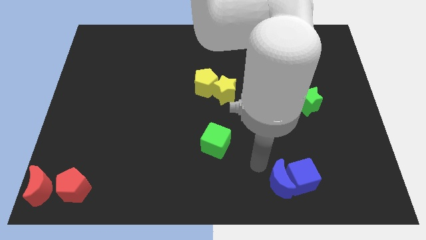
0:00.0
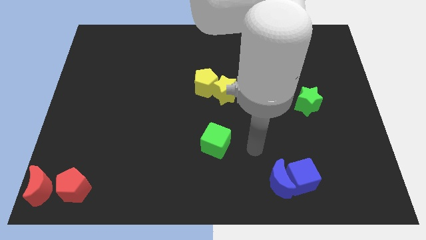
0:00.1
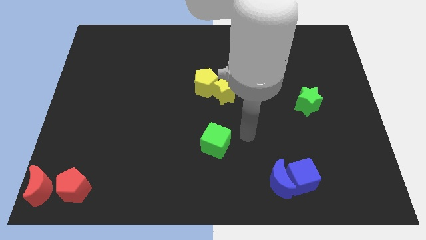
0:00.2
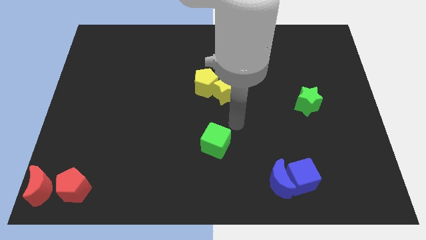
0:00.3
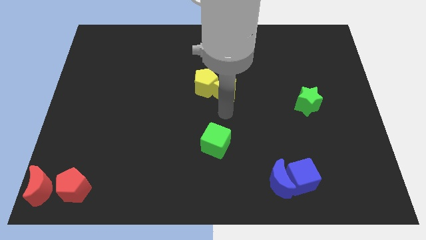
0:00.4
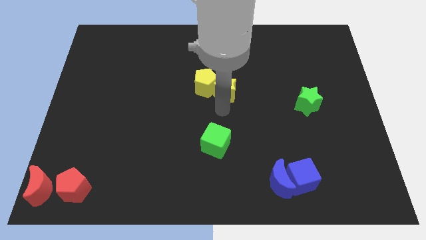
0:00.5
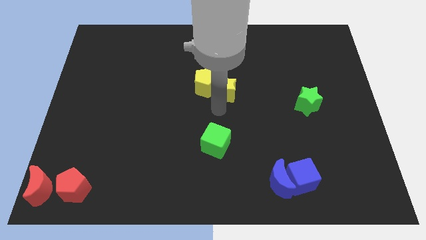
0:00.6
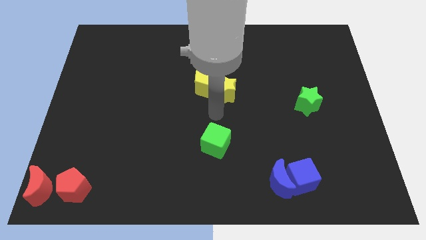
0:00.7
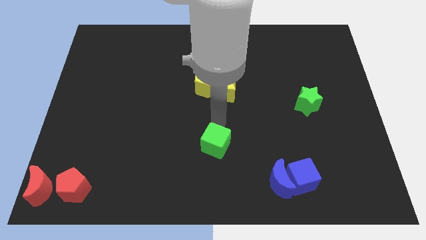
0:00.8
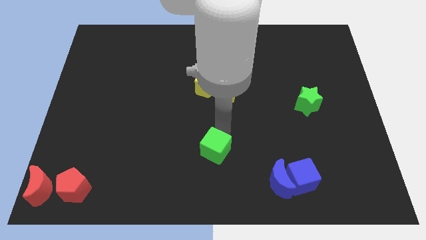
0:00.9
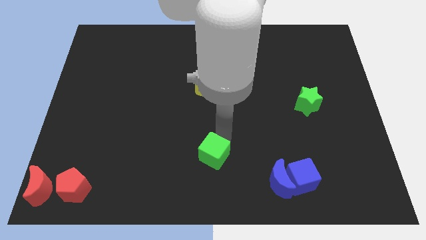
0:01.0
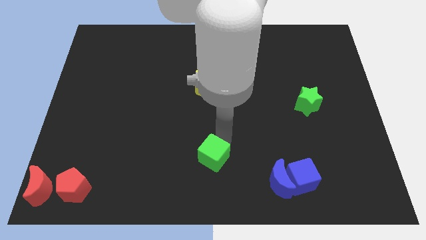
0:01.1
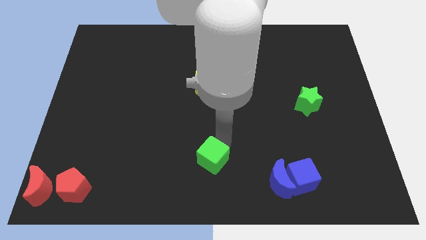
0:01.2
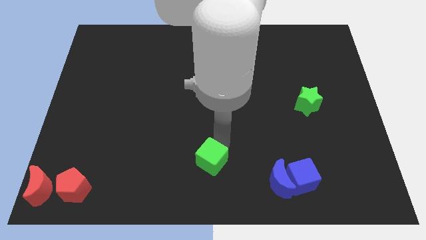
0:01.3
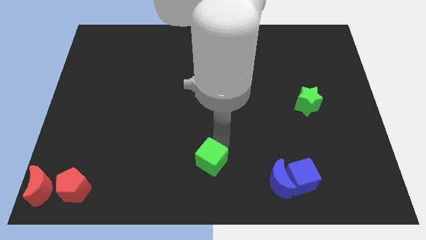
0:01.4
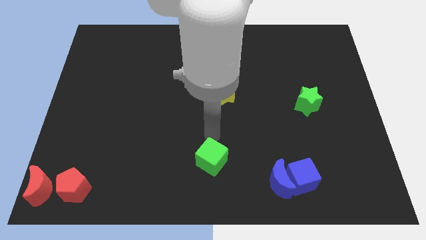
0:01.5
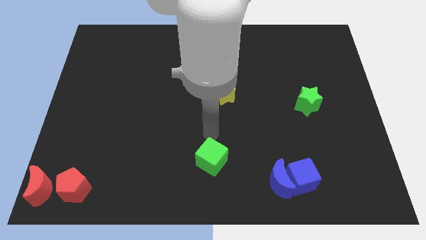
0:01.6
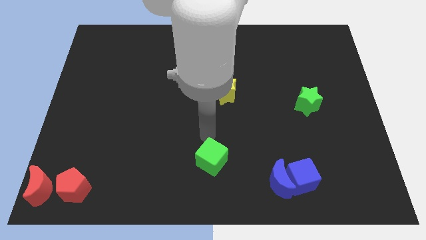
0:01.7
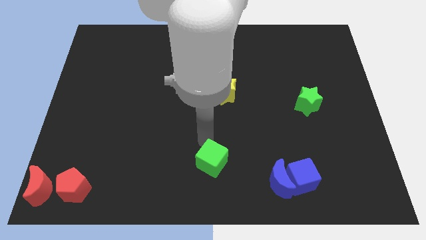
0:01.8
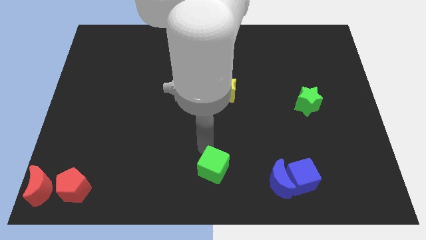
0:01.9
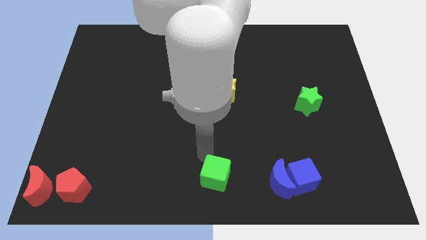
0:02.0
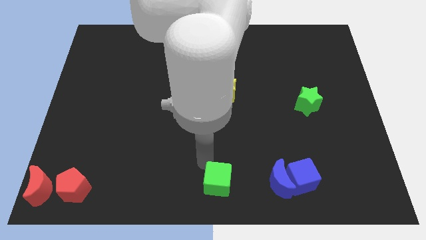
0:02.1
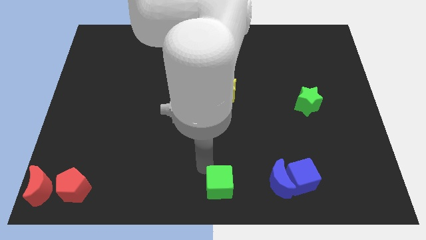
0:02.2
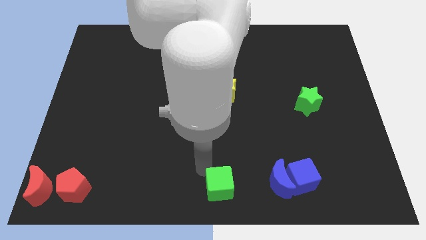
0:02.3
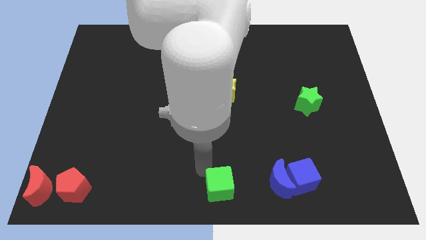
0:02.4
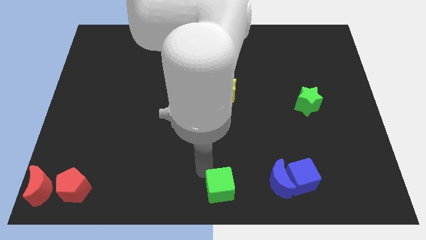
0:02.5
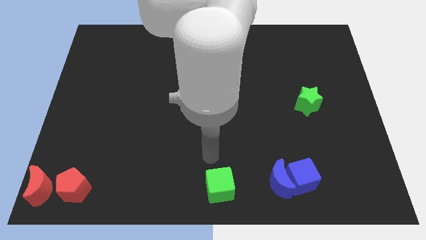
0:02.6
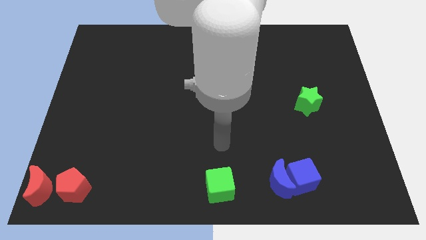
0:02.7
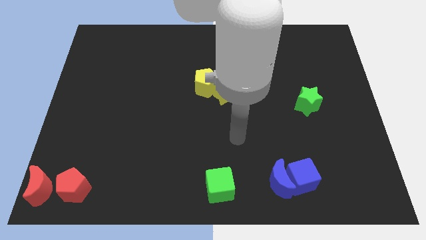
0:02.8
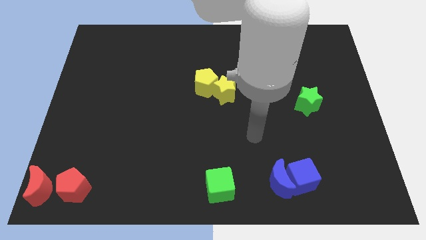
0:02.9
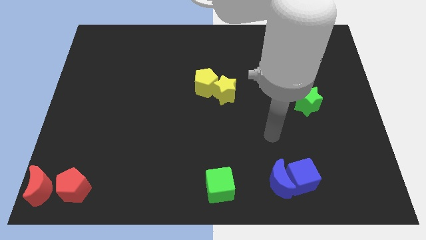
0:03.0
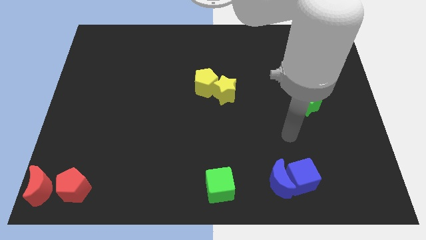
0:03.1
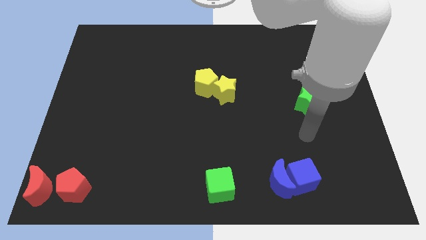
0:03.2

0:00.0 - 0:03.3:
move the green cube to the bottom center

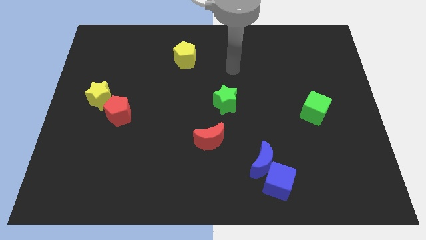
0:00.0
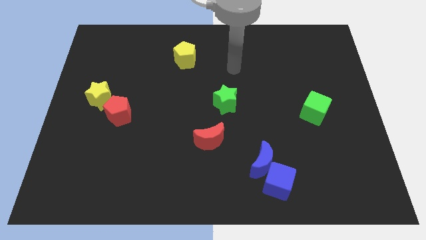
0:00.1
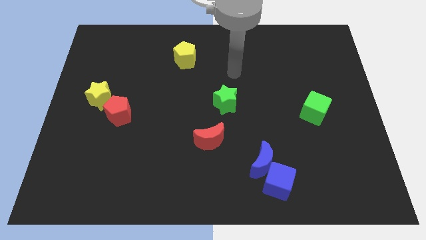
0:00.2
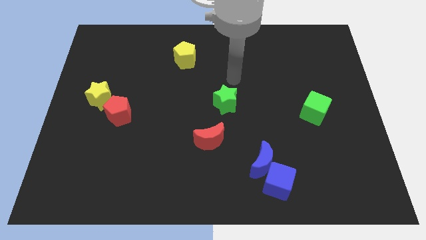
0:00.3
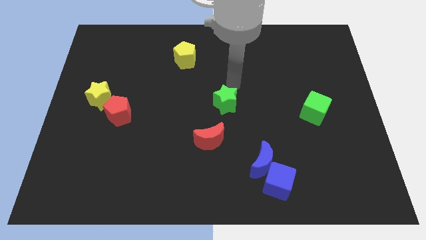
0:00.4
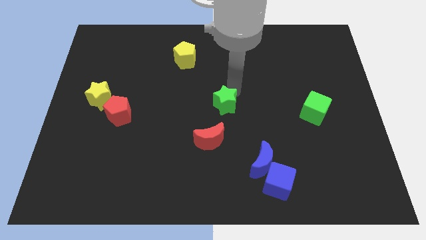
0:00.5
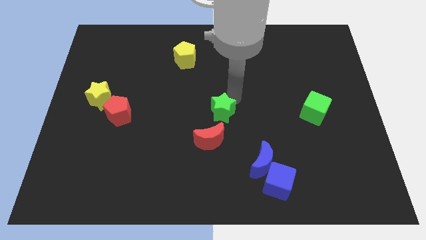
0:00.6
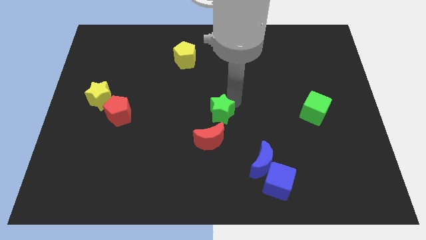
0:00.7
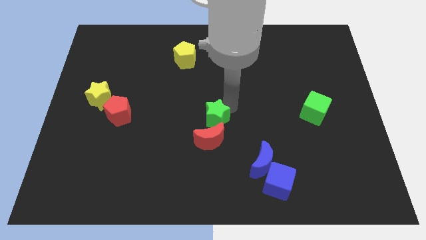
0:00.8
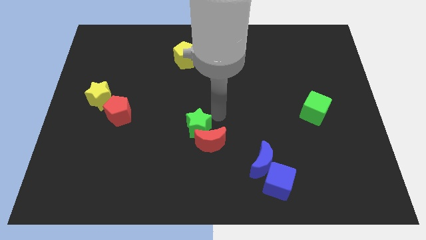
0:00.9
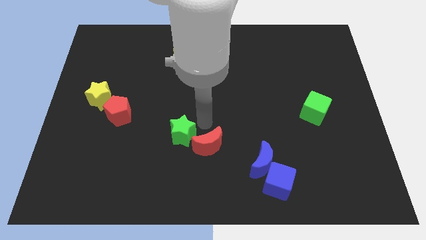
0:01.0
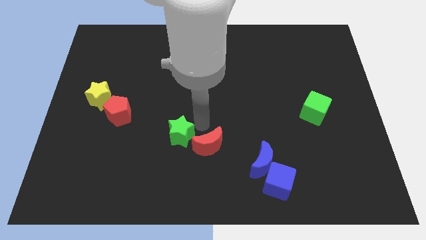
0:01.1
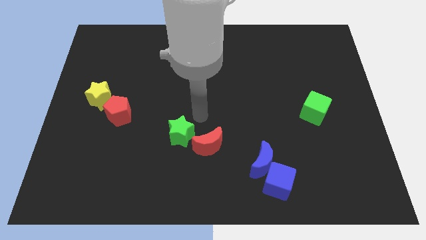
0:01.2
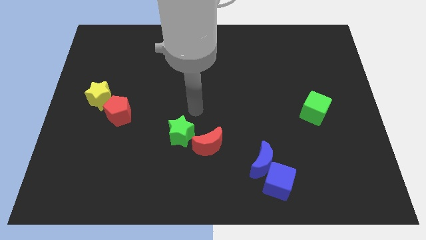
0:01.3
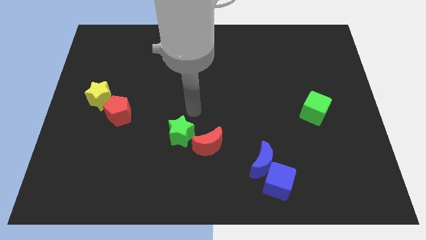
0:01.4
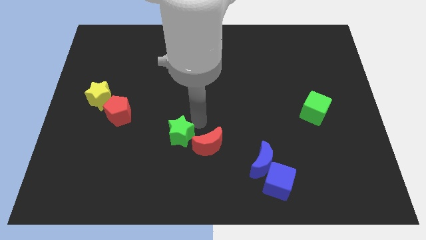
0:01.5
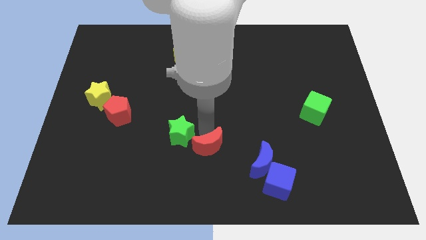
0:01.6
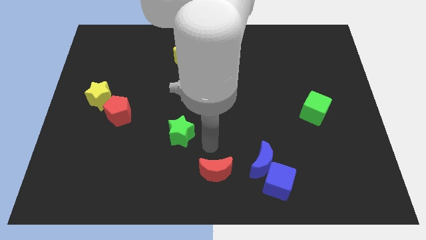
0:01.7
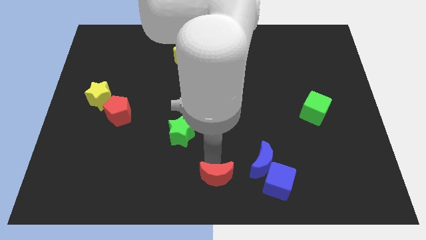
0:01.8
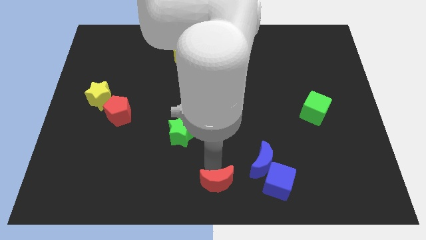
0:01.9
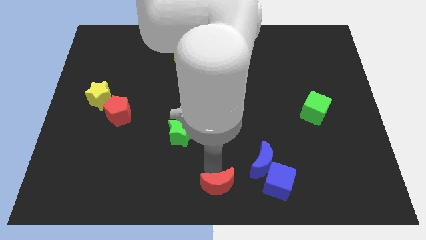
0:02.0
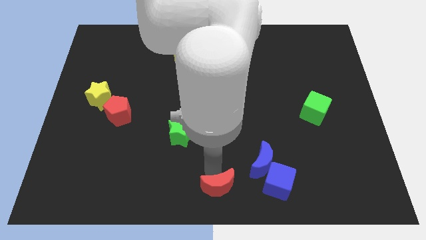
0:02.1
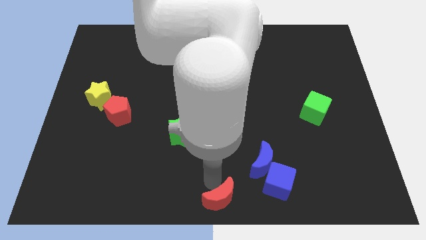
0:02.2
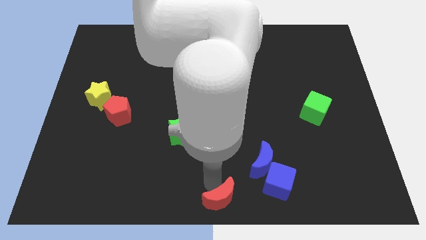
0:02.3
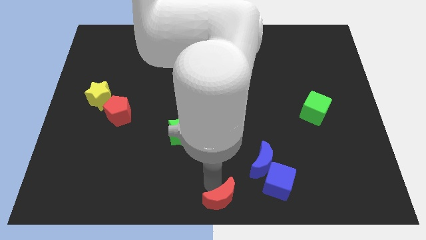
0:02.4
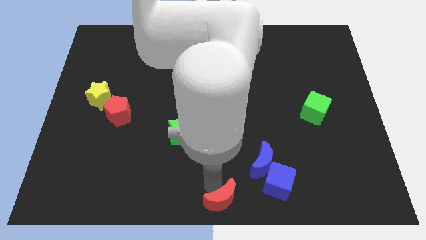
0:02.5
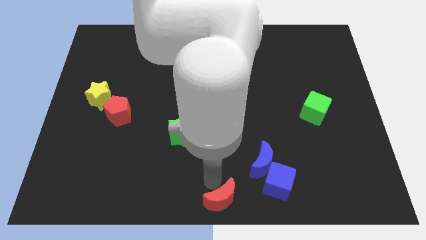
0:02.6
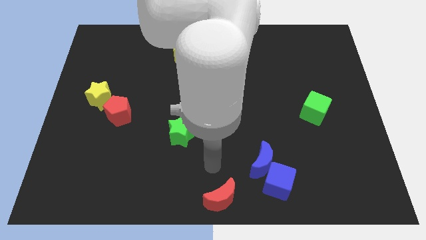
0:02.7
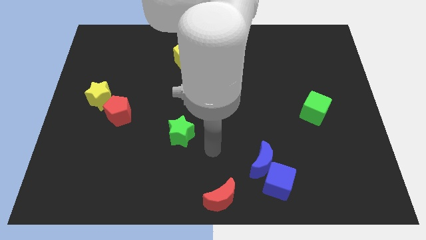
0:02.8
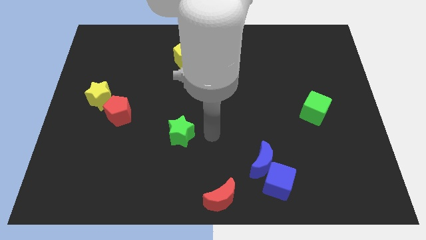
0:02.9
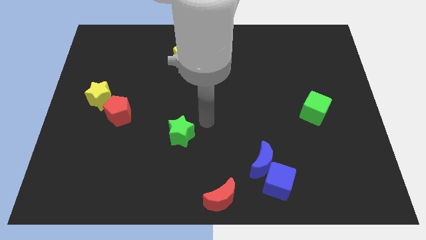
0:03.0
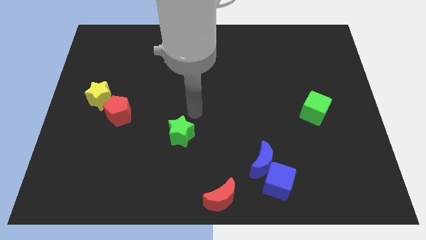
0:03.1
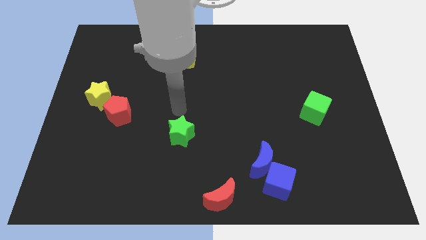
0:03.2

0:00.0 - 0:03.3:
move the red moon to the bottom center of the board

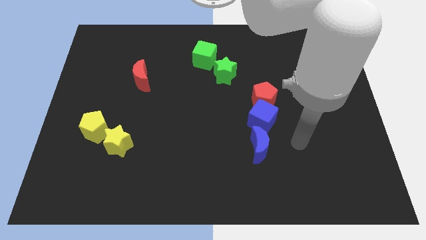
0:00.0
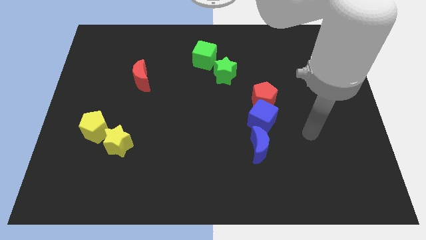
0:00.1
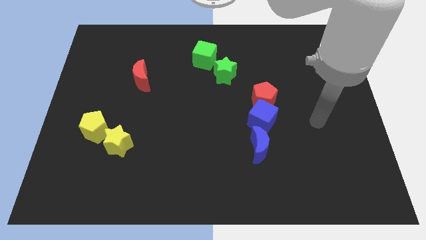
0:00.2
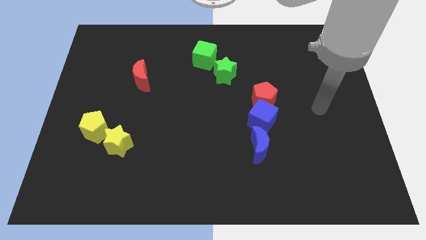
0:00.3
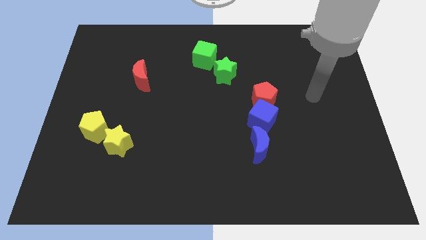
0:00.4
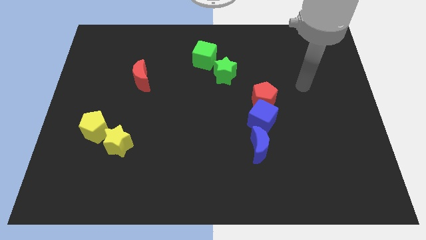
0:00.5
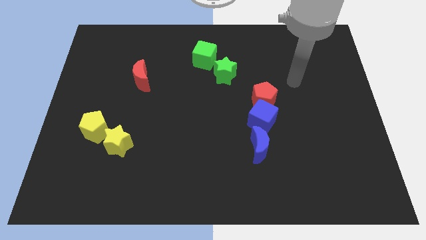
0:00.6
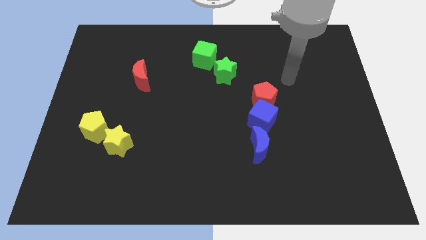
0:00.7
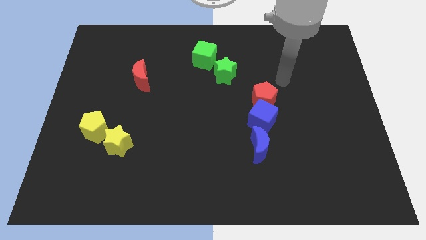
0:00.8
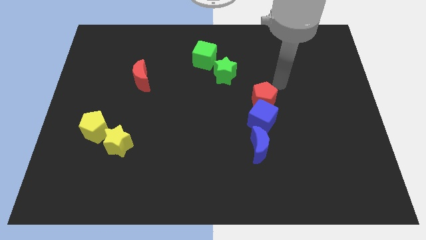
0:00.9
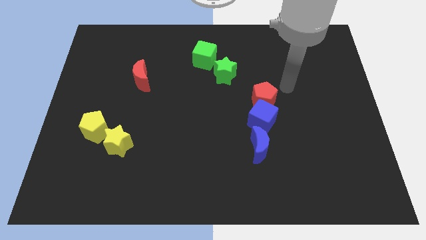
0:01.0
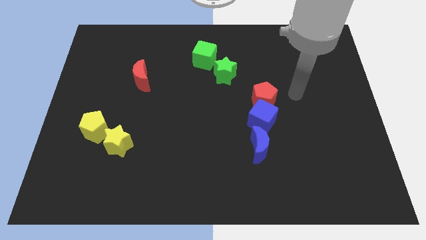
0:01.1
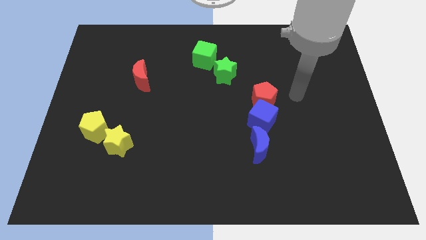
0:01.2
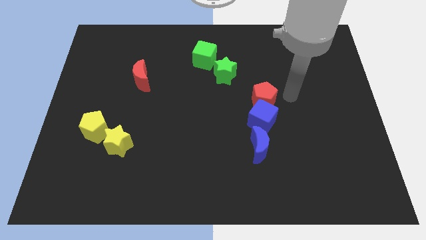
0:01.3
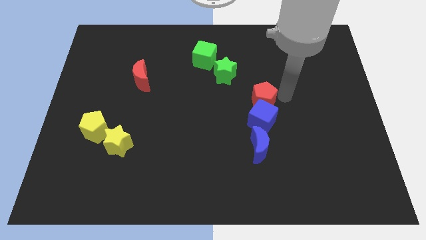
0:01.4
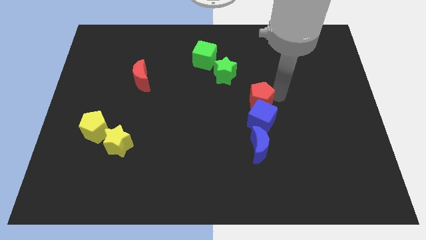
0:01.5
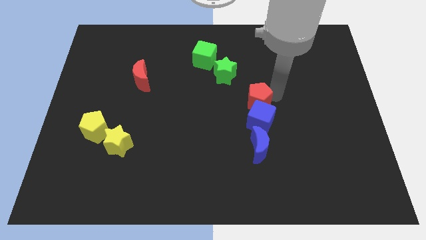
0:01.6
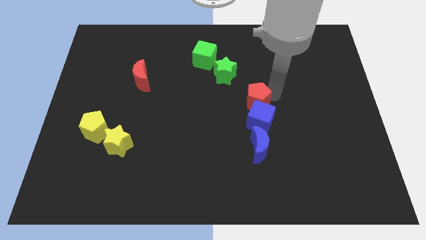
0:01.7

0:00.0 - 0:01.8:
touch the right side of the red pentagon

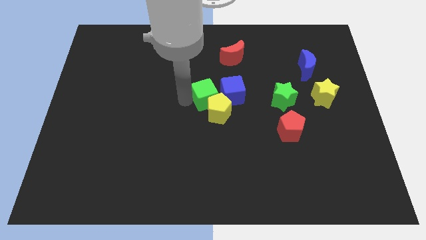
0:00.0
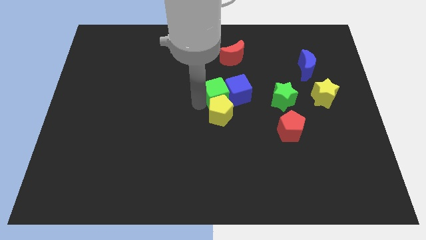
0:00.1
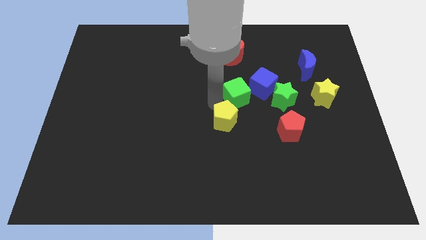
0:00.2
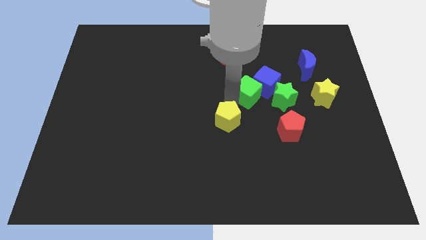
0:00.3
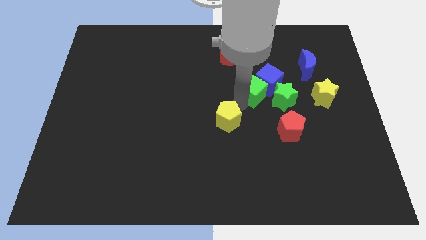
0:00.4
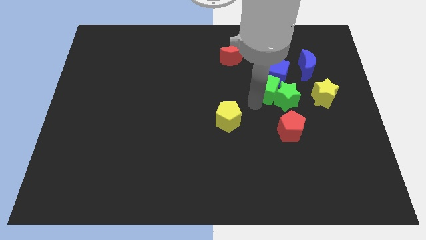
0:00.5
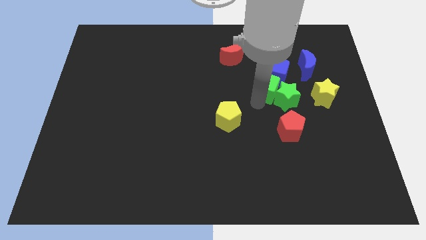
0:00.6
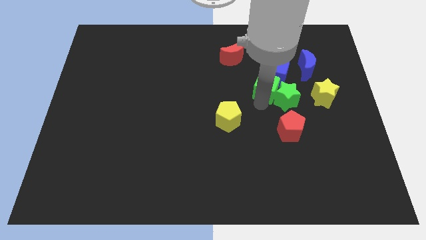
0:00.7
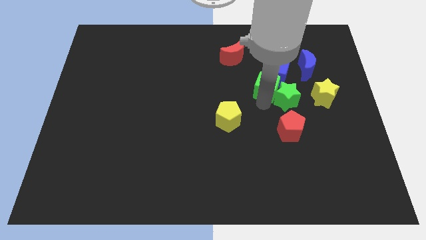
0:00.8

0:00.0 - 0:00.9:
move the green cube diagonally above the green star
